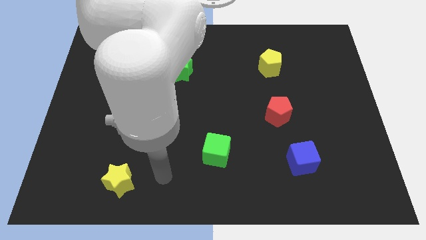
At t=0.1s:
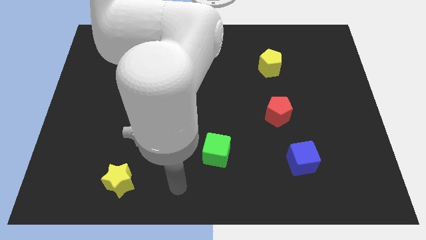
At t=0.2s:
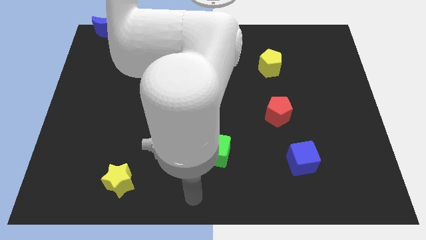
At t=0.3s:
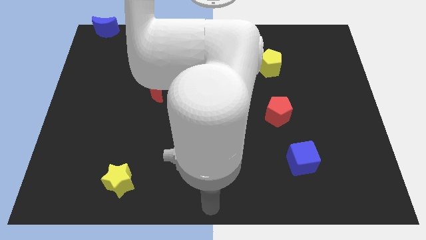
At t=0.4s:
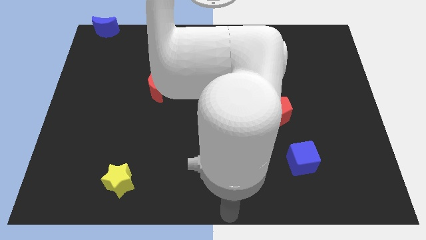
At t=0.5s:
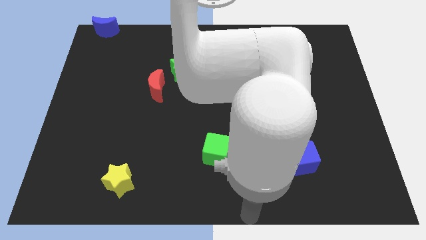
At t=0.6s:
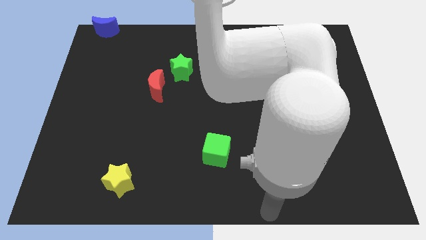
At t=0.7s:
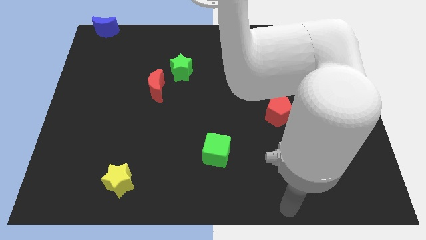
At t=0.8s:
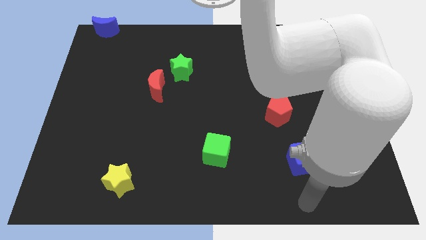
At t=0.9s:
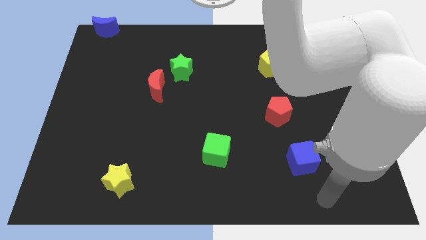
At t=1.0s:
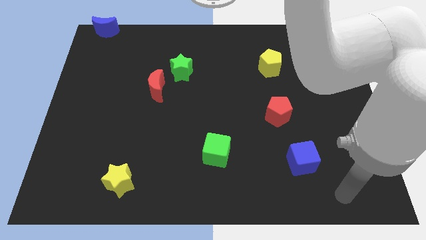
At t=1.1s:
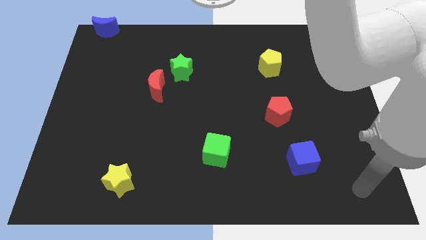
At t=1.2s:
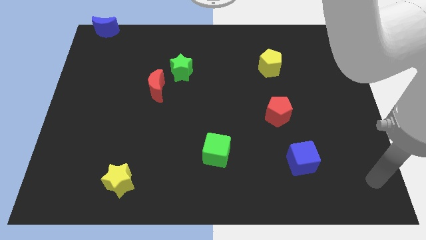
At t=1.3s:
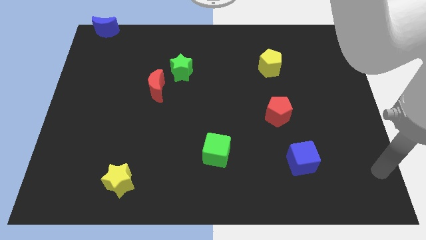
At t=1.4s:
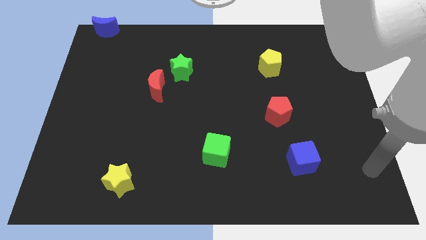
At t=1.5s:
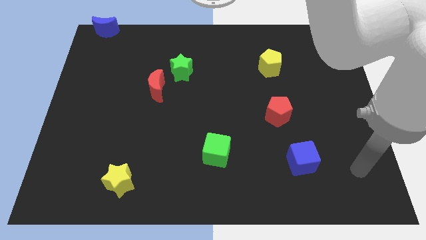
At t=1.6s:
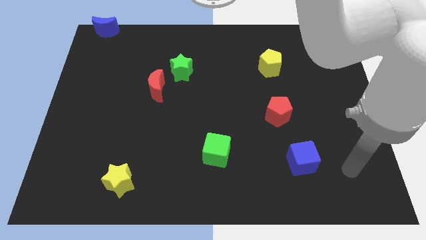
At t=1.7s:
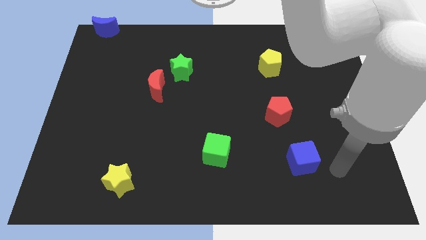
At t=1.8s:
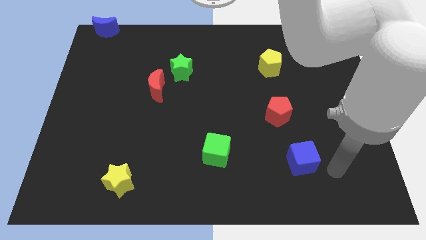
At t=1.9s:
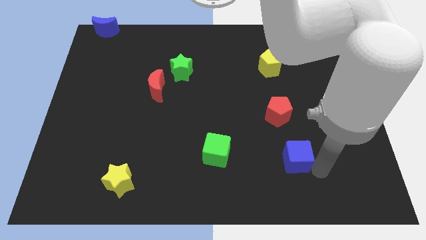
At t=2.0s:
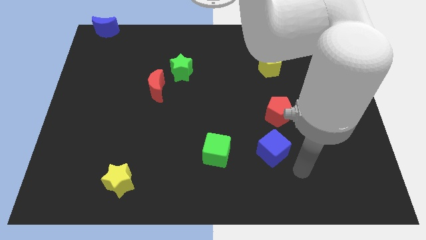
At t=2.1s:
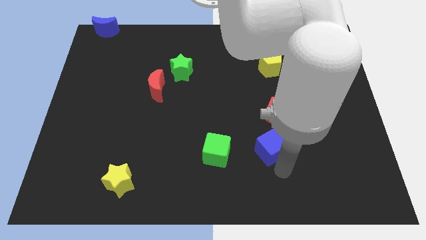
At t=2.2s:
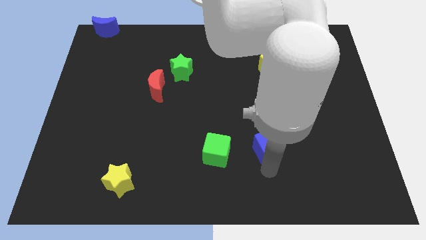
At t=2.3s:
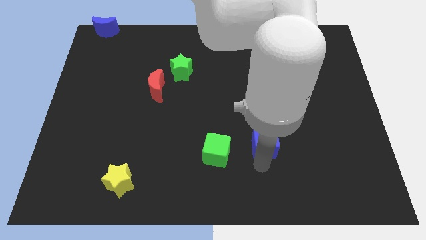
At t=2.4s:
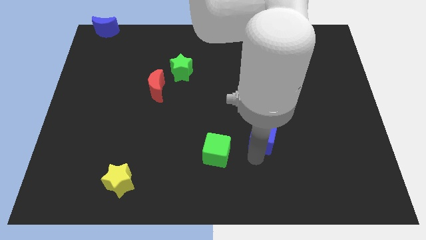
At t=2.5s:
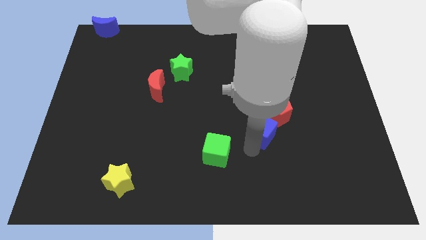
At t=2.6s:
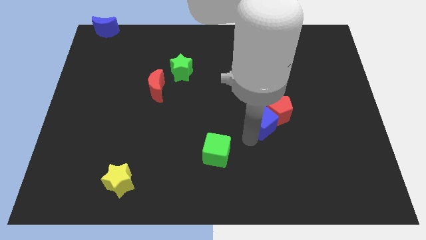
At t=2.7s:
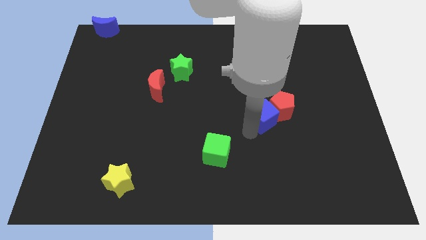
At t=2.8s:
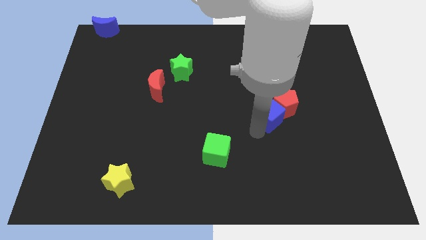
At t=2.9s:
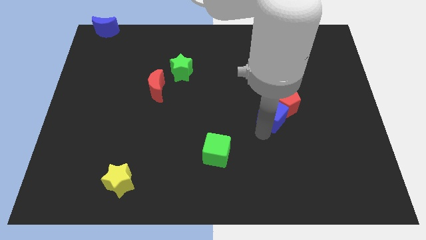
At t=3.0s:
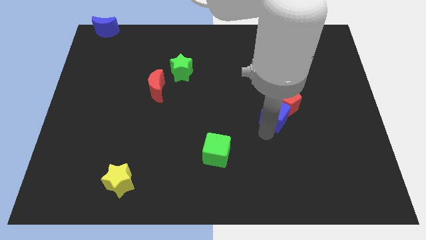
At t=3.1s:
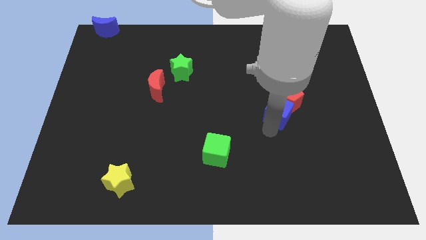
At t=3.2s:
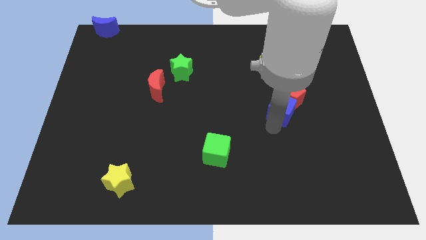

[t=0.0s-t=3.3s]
move the blue cube into the red pentagon

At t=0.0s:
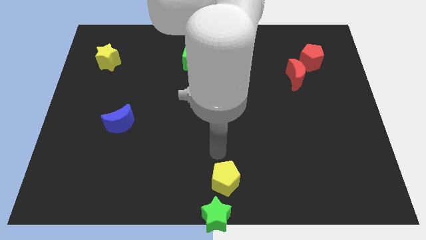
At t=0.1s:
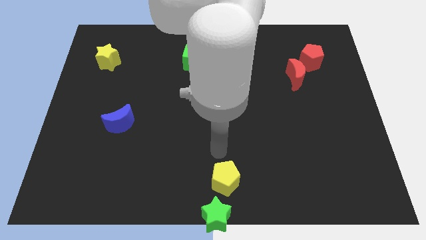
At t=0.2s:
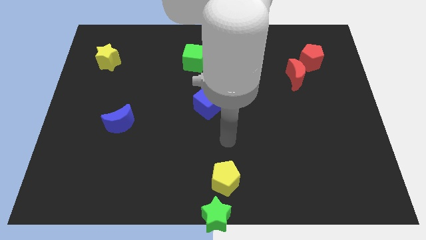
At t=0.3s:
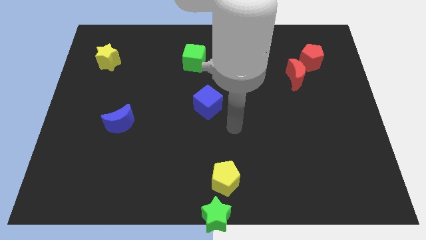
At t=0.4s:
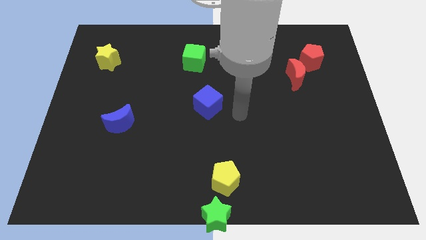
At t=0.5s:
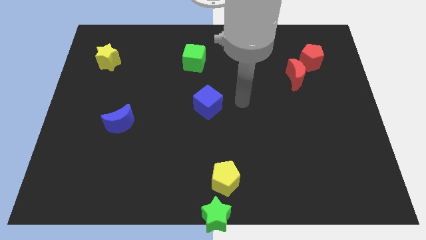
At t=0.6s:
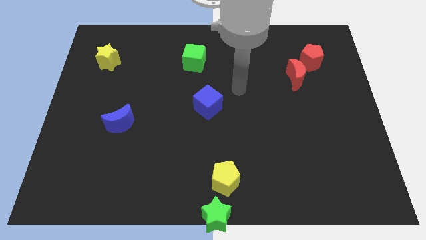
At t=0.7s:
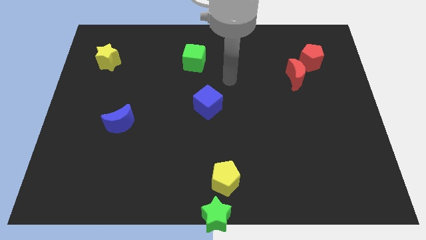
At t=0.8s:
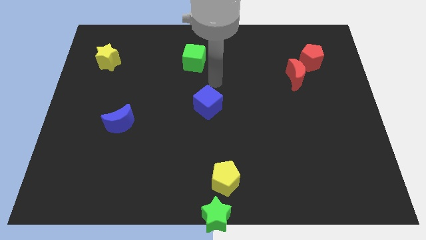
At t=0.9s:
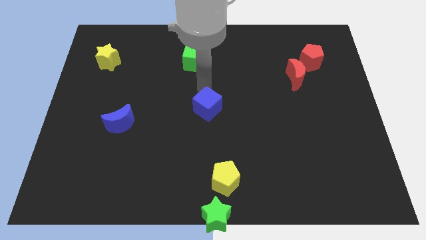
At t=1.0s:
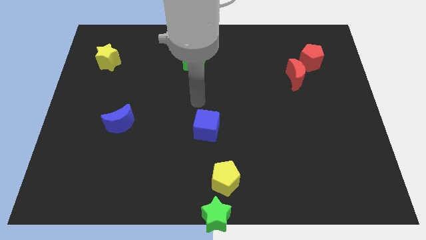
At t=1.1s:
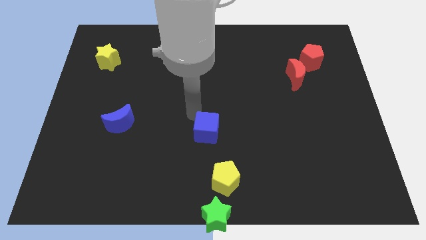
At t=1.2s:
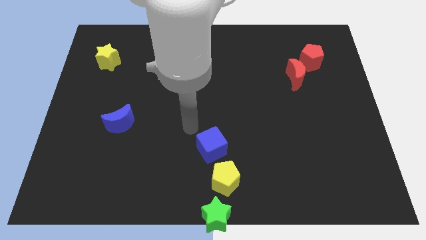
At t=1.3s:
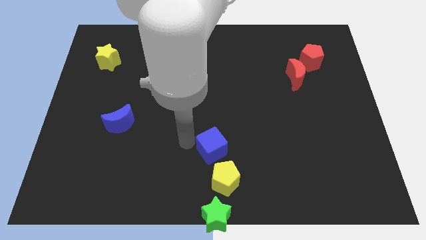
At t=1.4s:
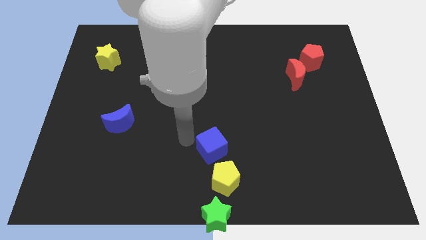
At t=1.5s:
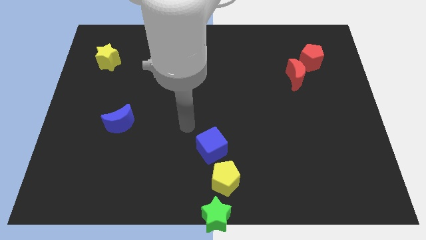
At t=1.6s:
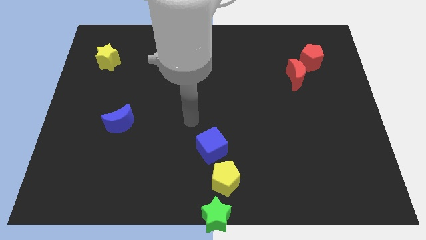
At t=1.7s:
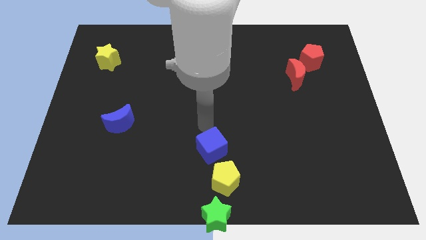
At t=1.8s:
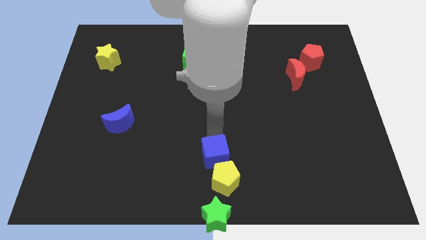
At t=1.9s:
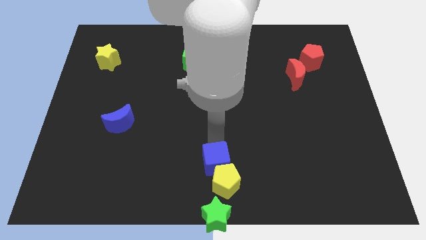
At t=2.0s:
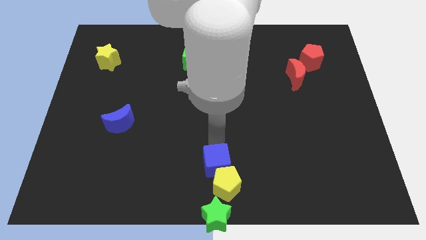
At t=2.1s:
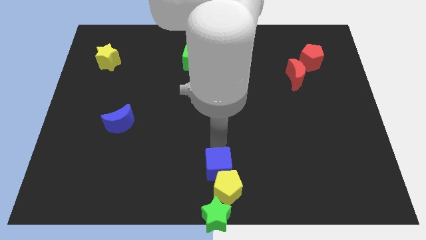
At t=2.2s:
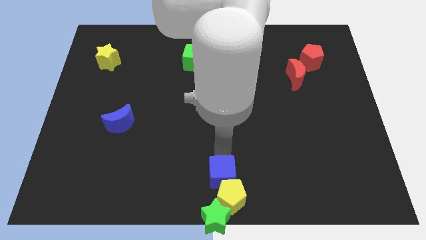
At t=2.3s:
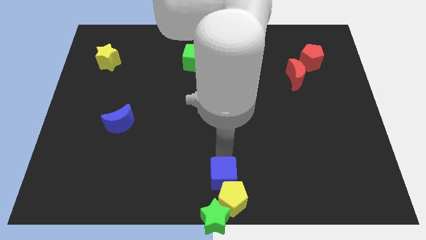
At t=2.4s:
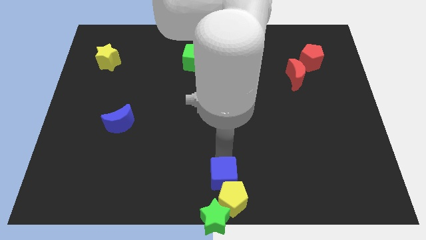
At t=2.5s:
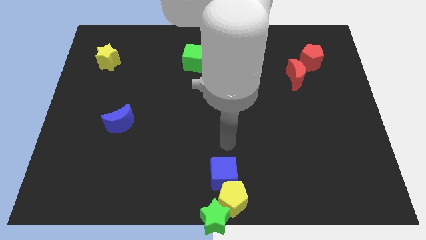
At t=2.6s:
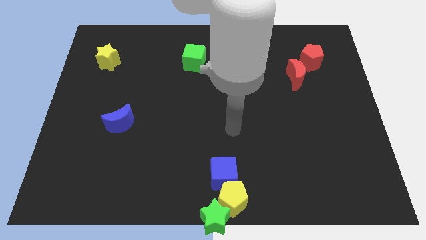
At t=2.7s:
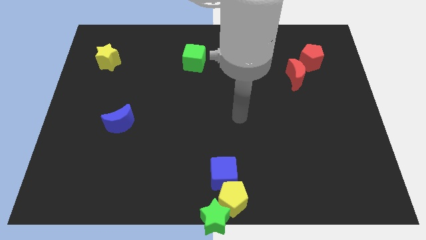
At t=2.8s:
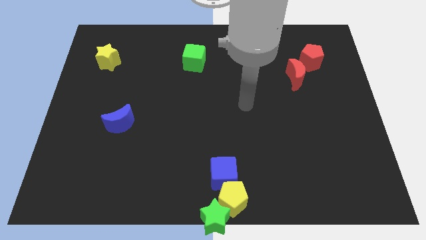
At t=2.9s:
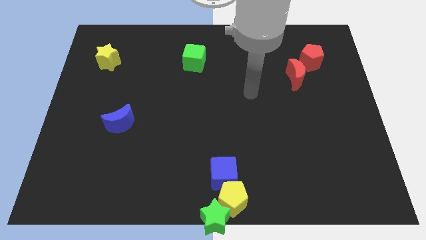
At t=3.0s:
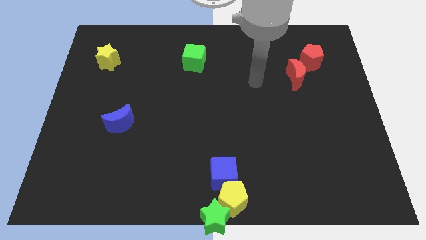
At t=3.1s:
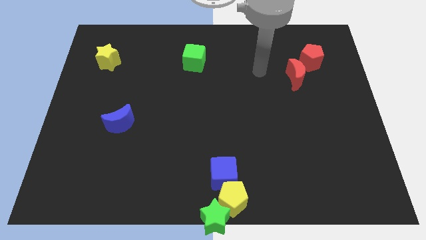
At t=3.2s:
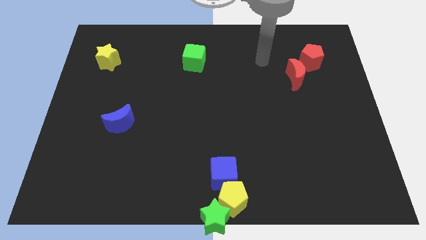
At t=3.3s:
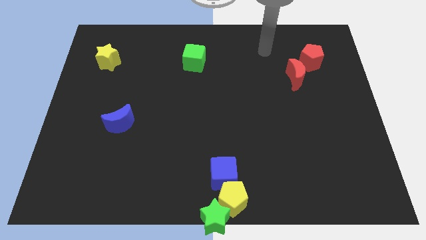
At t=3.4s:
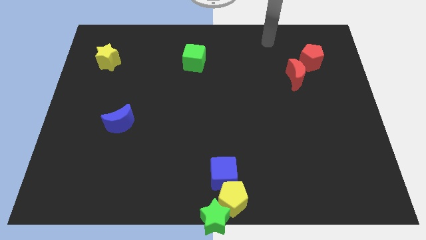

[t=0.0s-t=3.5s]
push the blue cube into yellow pentagon

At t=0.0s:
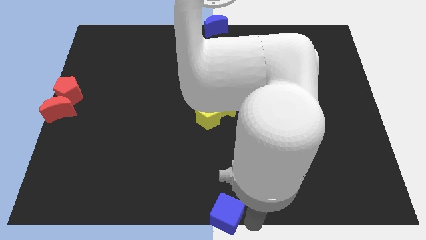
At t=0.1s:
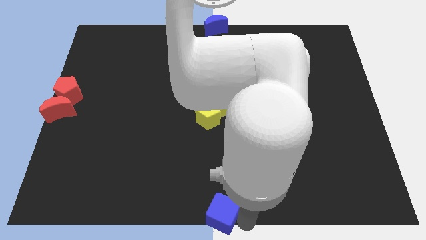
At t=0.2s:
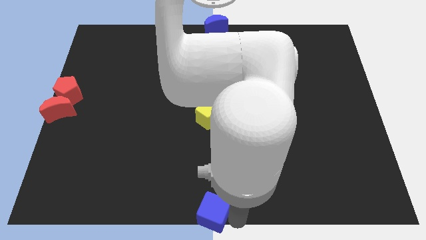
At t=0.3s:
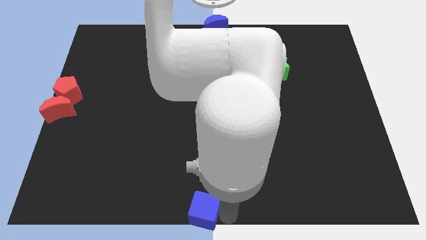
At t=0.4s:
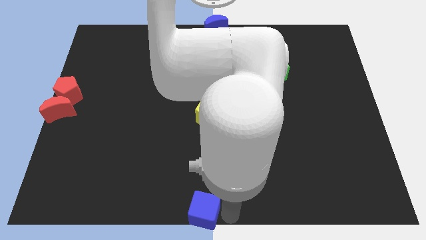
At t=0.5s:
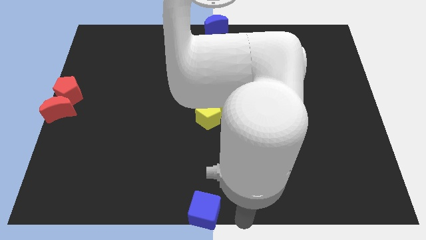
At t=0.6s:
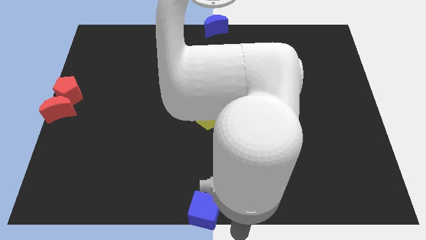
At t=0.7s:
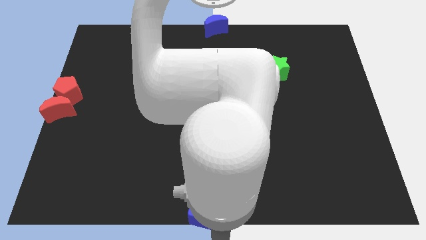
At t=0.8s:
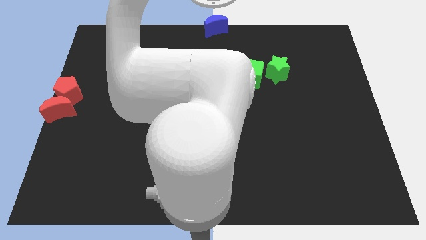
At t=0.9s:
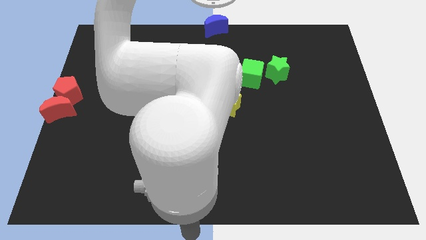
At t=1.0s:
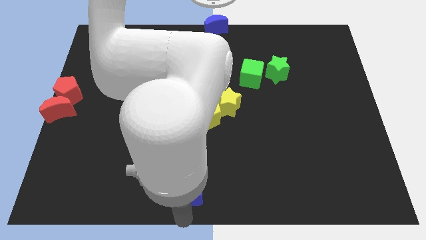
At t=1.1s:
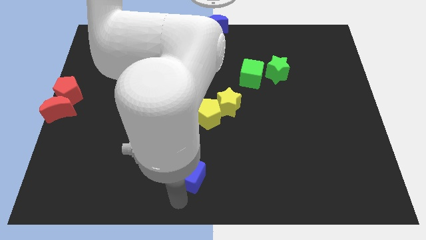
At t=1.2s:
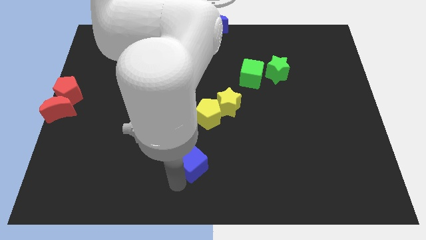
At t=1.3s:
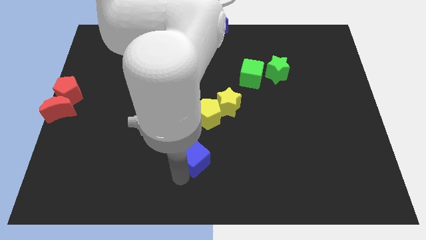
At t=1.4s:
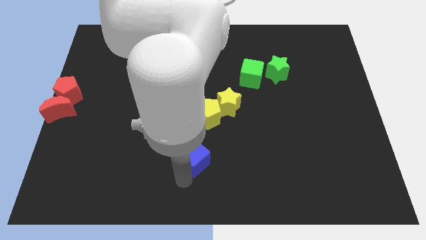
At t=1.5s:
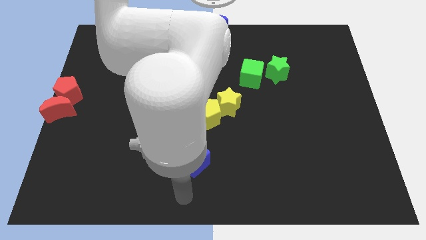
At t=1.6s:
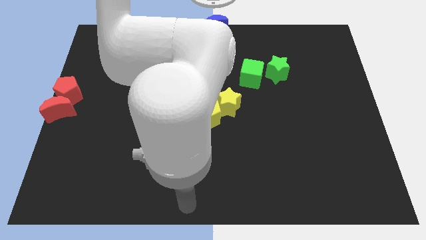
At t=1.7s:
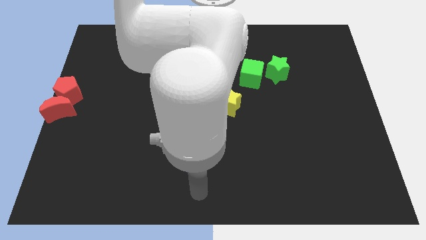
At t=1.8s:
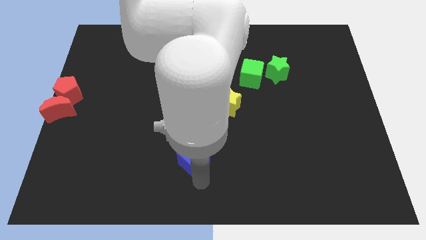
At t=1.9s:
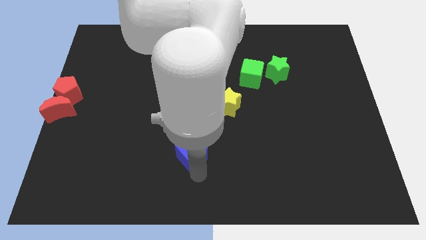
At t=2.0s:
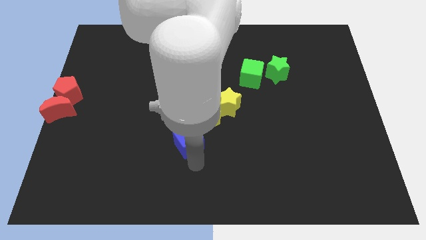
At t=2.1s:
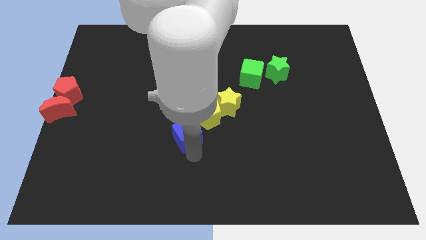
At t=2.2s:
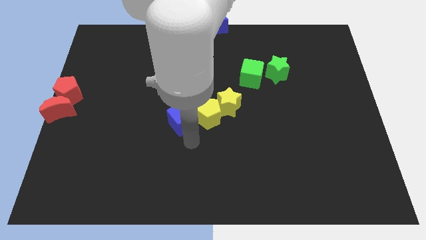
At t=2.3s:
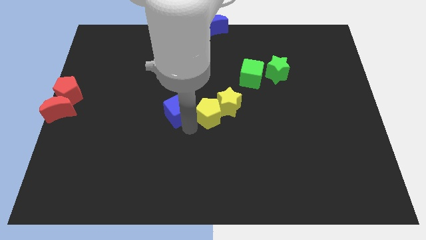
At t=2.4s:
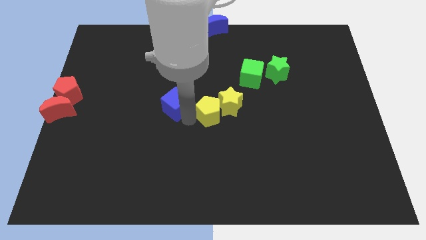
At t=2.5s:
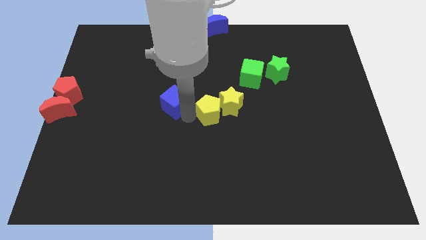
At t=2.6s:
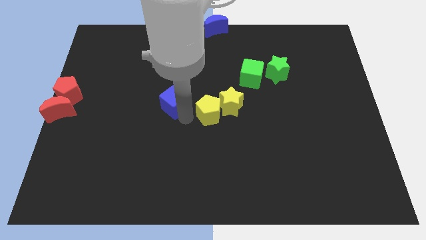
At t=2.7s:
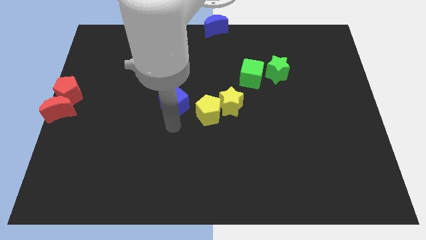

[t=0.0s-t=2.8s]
push the blue cube towards the top
